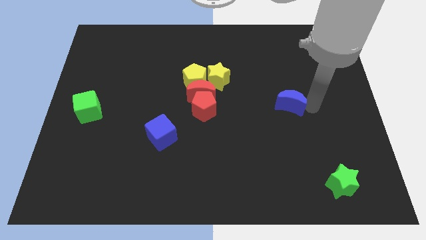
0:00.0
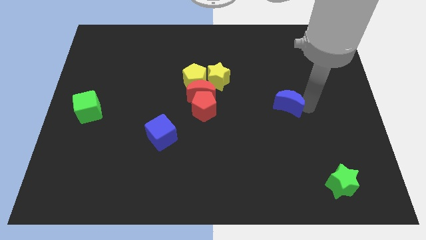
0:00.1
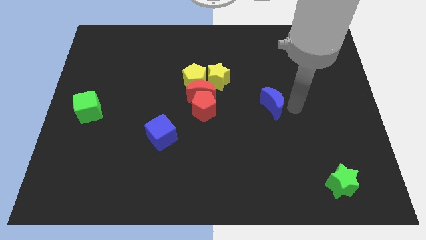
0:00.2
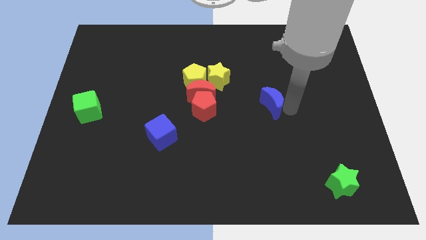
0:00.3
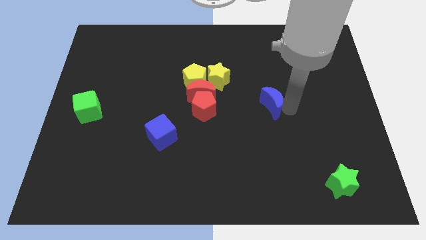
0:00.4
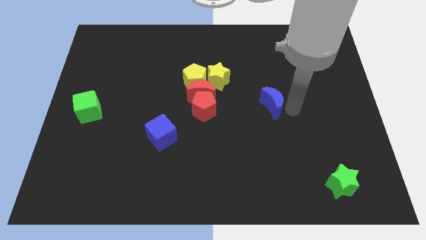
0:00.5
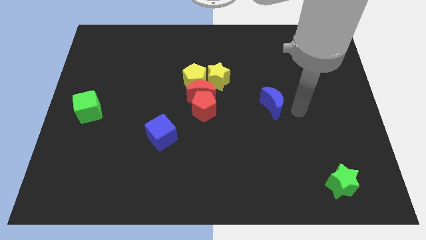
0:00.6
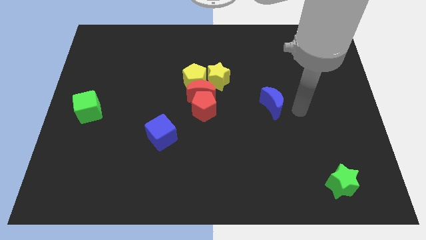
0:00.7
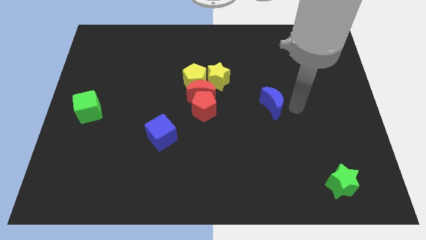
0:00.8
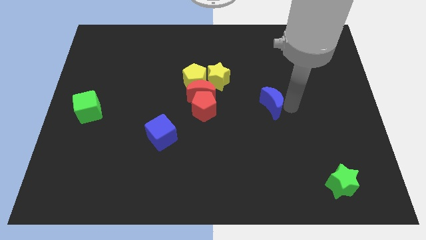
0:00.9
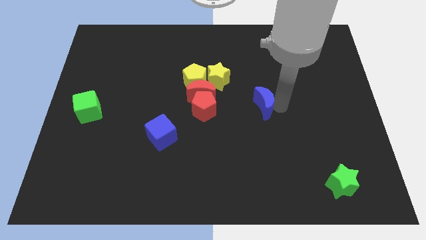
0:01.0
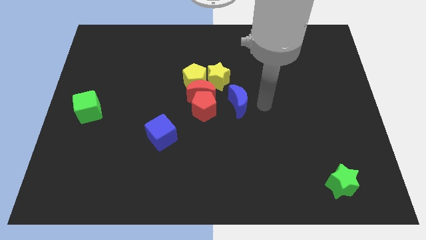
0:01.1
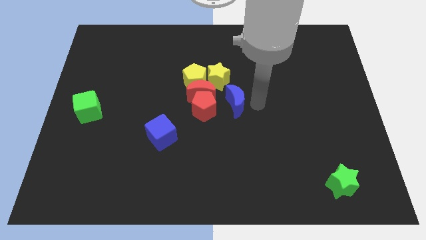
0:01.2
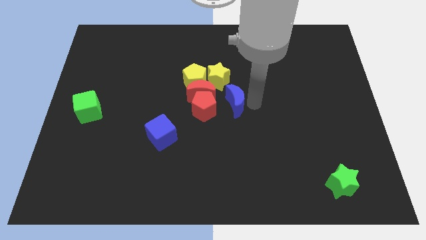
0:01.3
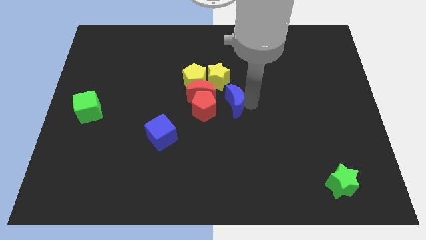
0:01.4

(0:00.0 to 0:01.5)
push the blue crescent close to the red crescent

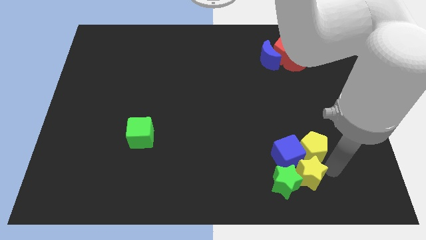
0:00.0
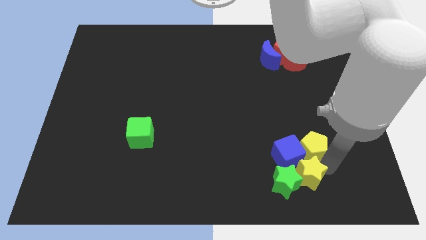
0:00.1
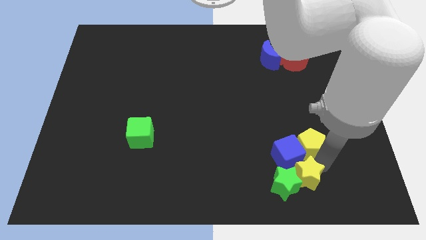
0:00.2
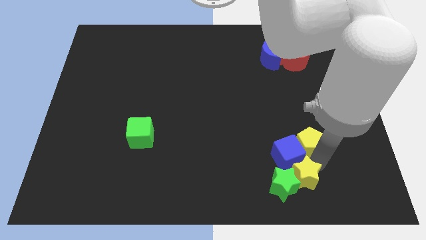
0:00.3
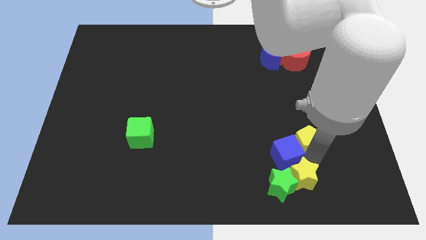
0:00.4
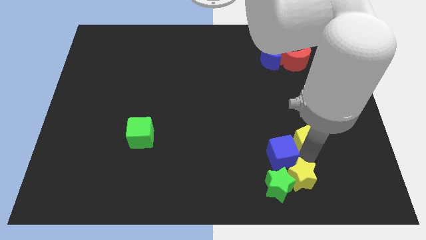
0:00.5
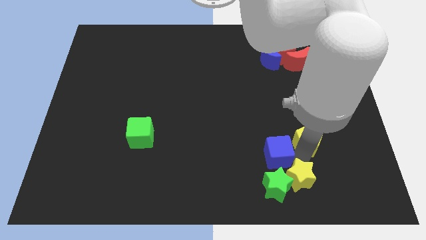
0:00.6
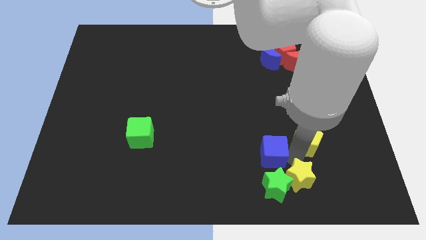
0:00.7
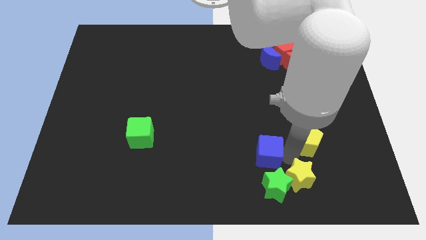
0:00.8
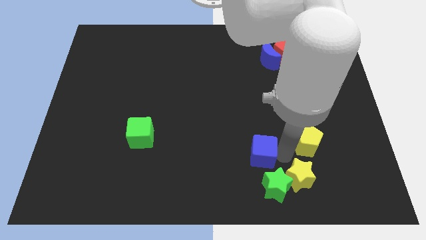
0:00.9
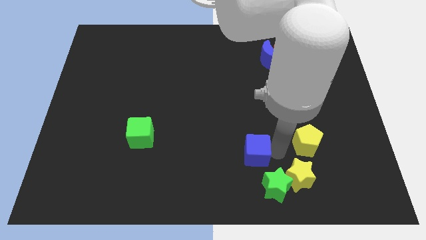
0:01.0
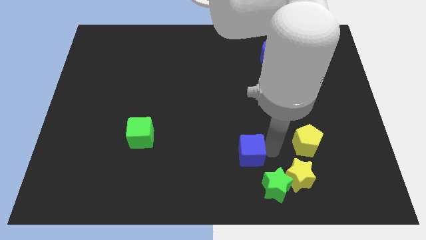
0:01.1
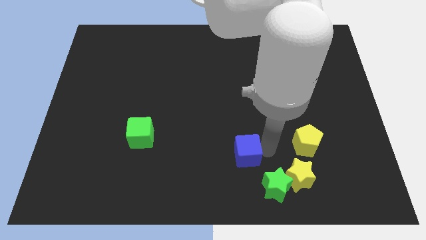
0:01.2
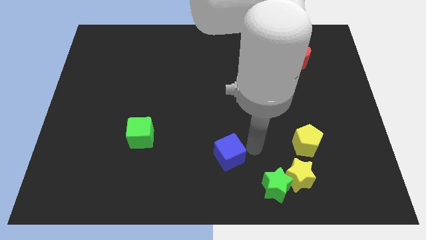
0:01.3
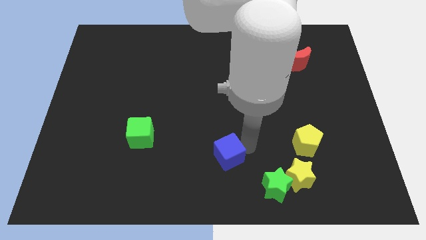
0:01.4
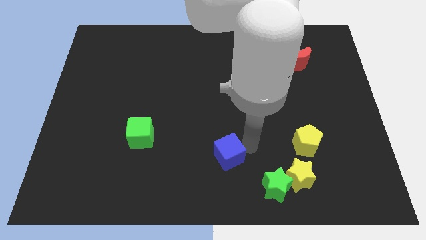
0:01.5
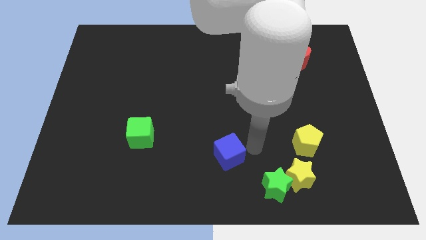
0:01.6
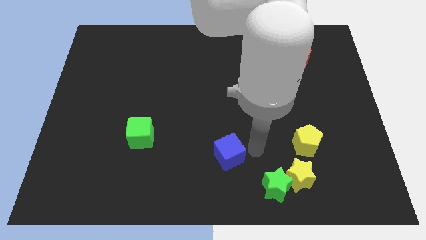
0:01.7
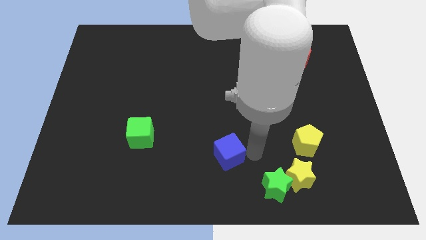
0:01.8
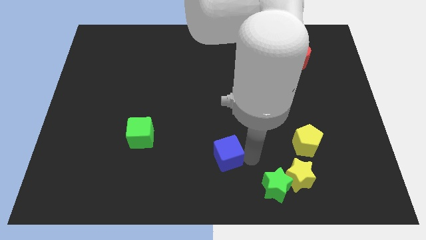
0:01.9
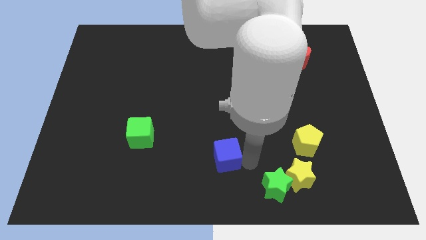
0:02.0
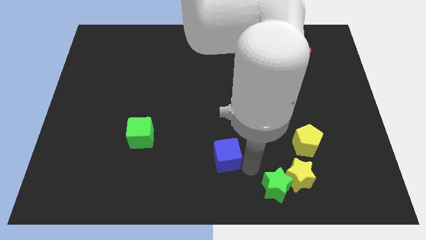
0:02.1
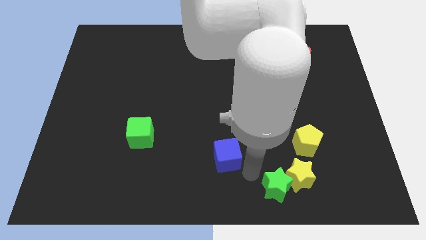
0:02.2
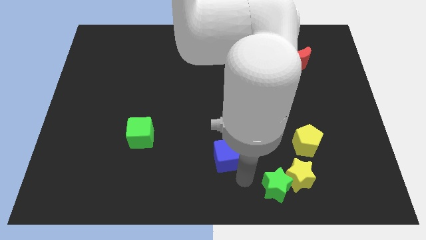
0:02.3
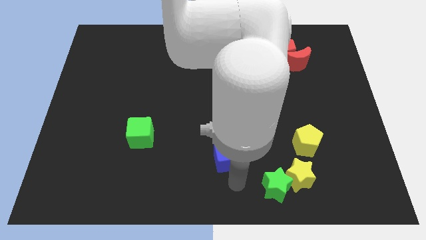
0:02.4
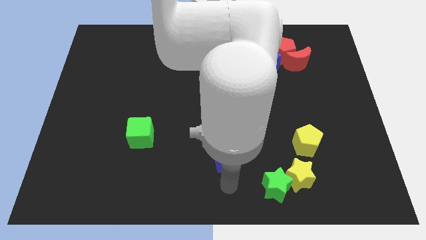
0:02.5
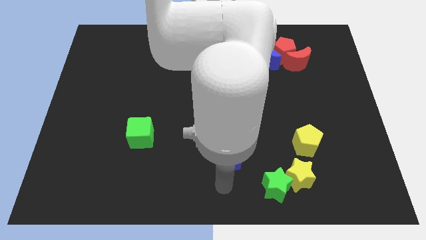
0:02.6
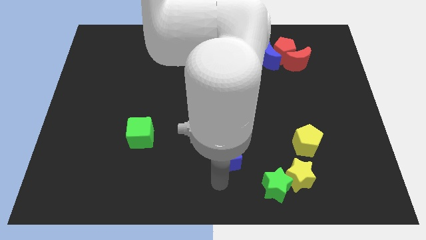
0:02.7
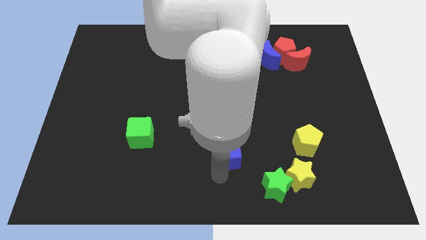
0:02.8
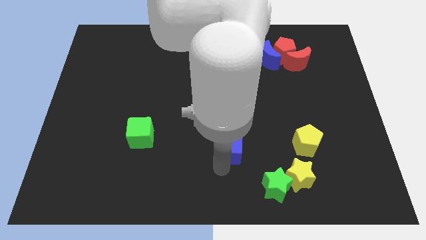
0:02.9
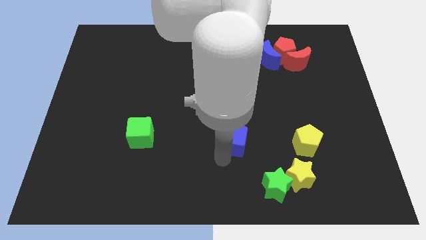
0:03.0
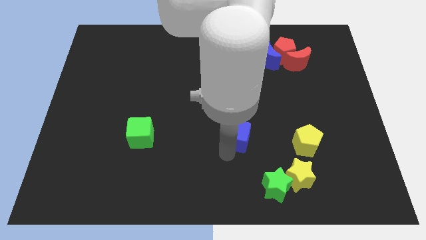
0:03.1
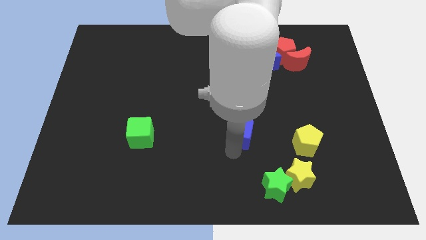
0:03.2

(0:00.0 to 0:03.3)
separate the blue cube to the right of green cube

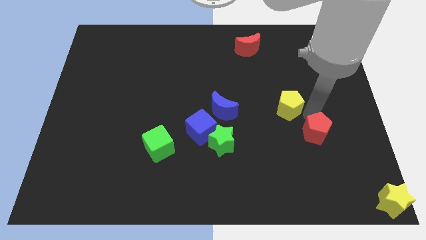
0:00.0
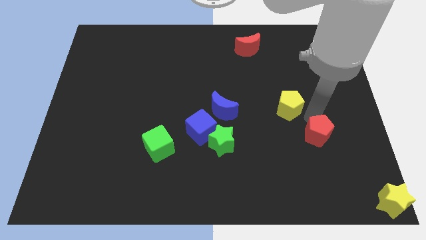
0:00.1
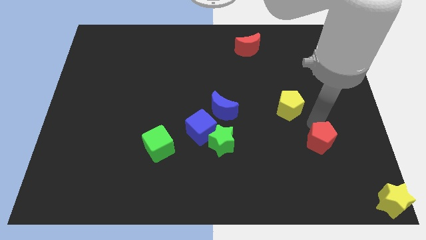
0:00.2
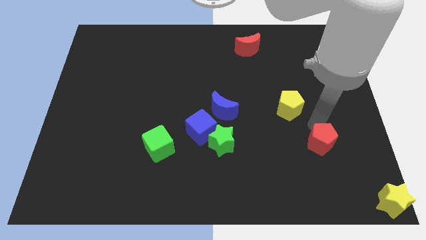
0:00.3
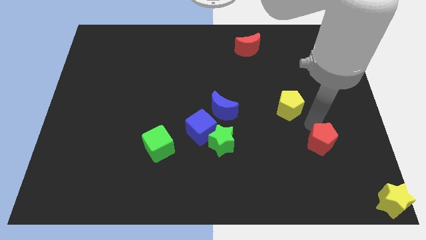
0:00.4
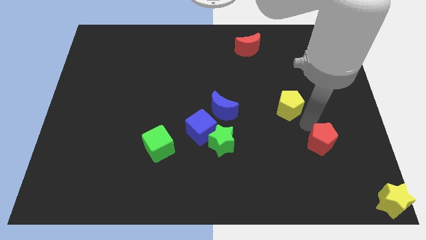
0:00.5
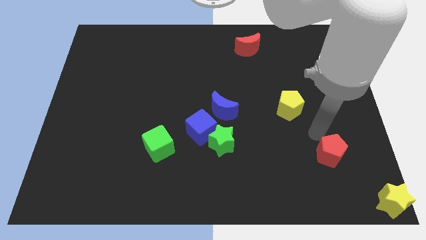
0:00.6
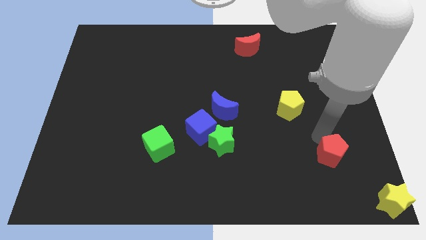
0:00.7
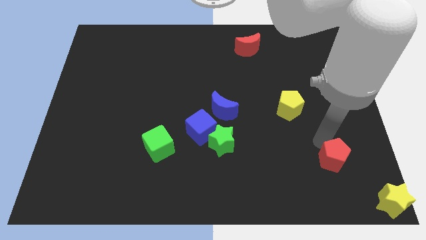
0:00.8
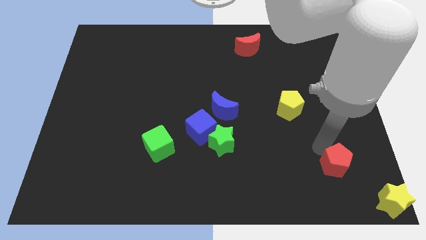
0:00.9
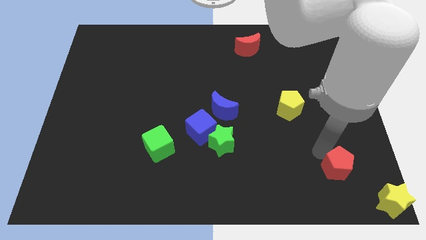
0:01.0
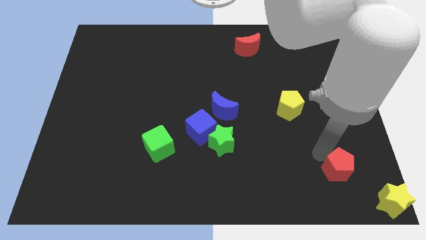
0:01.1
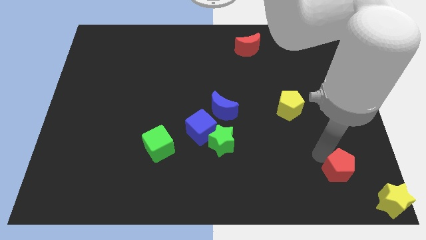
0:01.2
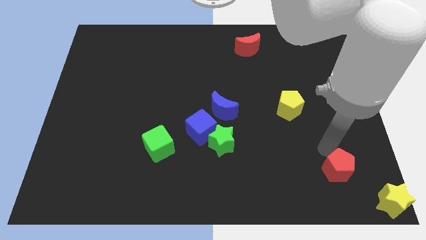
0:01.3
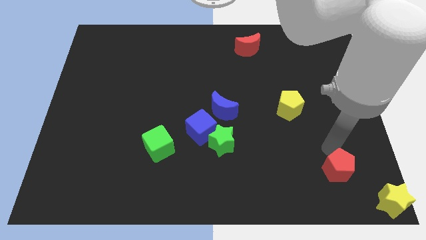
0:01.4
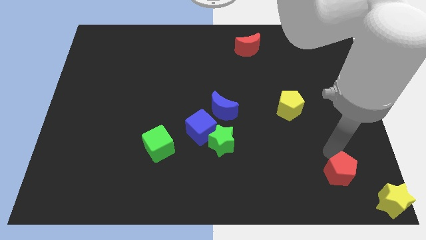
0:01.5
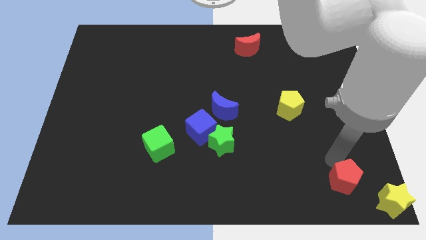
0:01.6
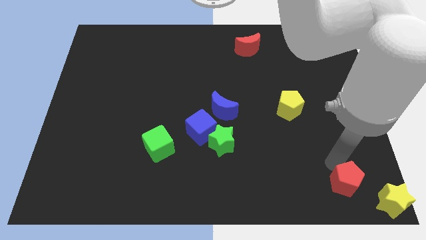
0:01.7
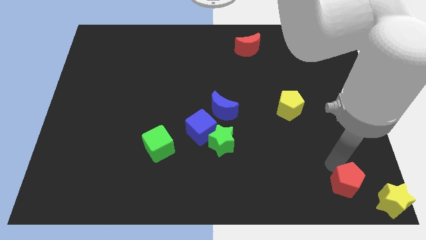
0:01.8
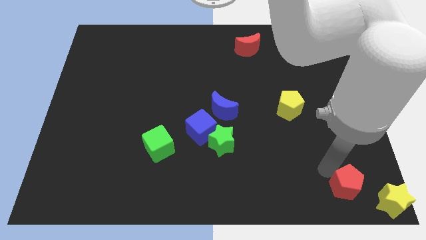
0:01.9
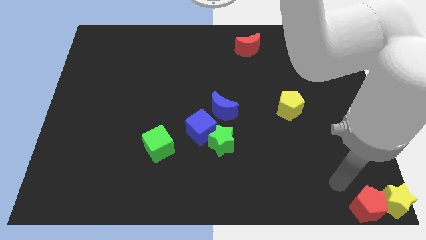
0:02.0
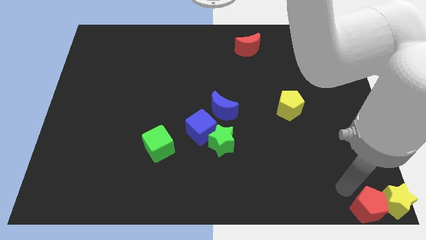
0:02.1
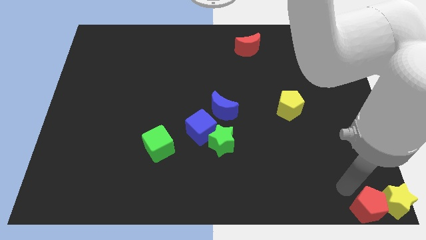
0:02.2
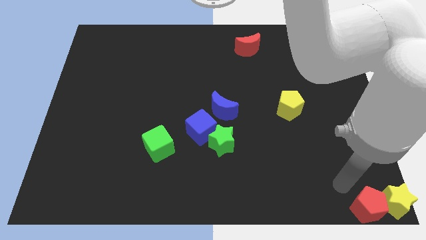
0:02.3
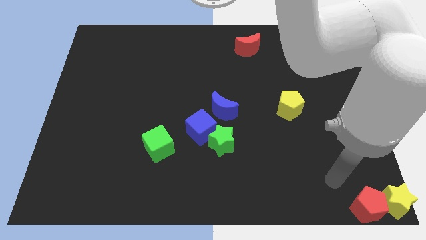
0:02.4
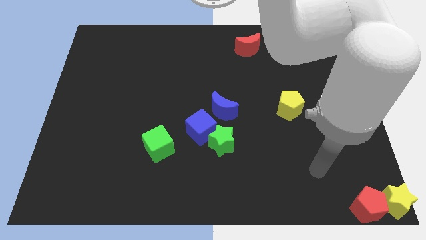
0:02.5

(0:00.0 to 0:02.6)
place the red pentagon at the bottom right corner of the board

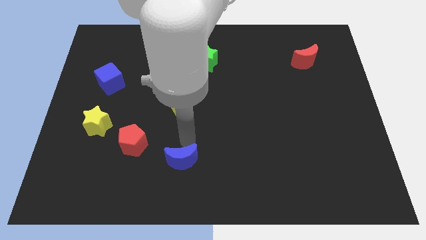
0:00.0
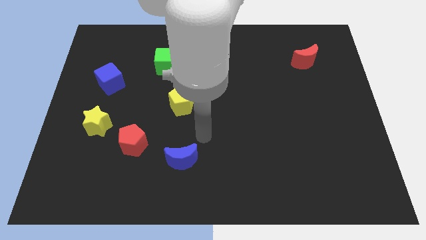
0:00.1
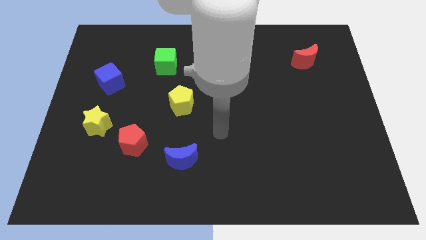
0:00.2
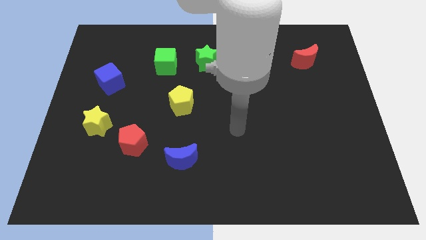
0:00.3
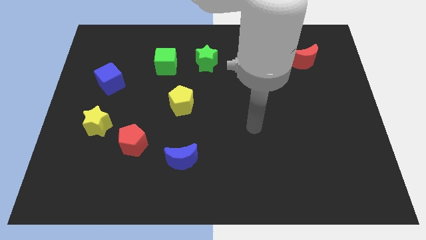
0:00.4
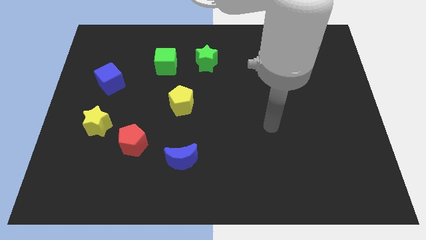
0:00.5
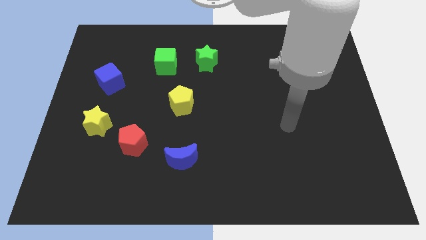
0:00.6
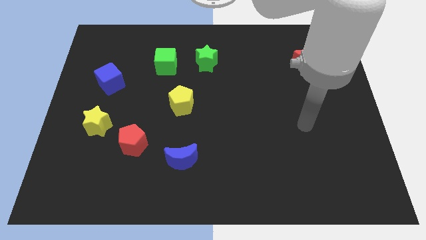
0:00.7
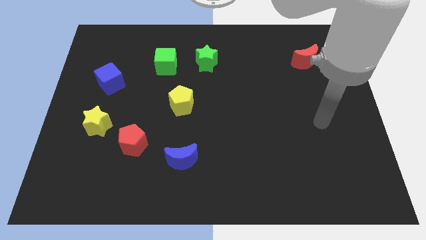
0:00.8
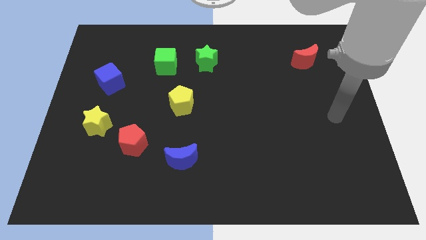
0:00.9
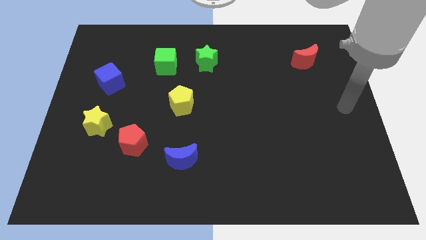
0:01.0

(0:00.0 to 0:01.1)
move your arm right side of the board

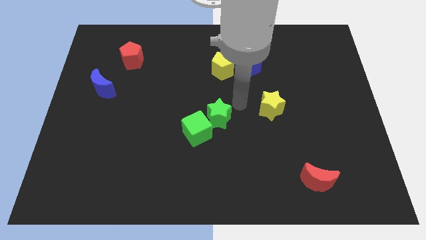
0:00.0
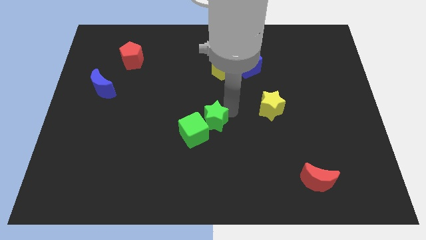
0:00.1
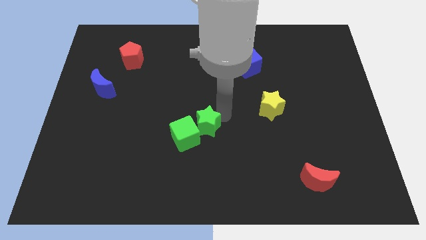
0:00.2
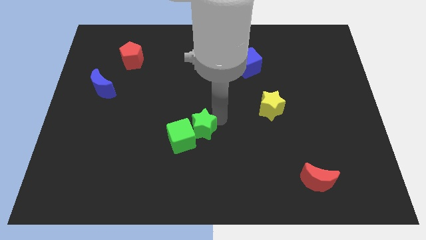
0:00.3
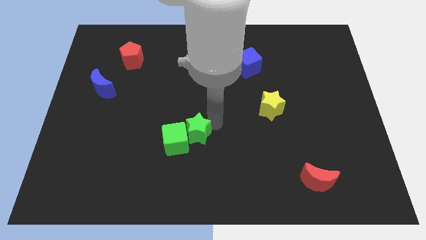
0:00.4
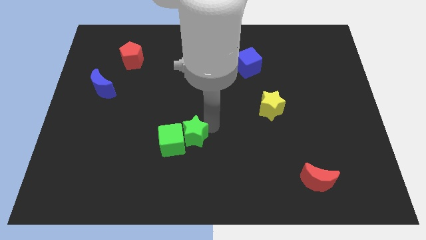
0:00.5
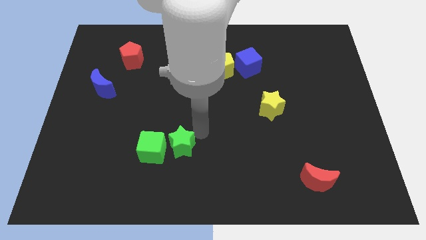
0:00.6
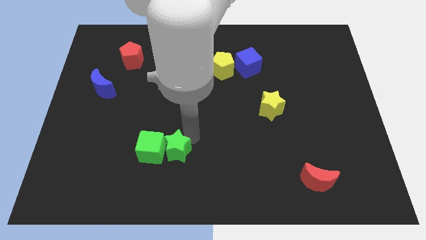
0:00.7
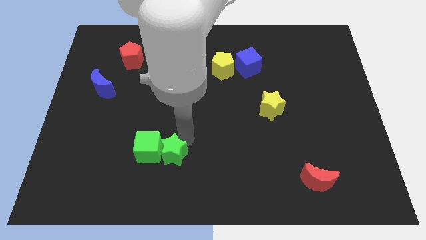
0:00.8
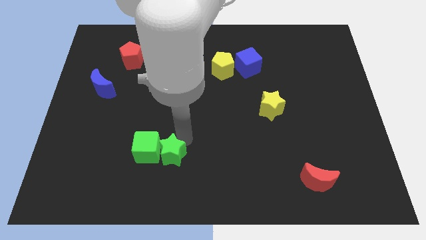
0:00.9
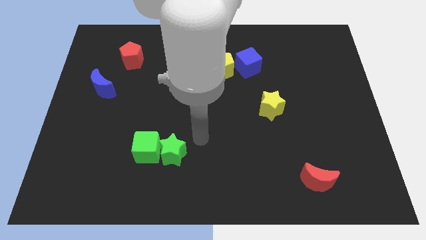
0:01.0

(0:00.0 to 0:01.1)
slide the green blocks towards the bottom left side
